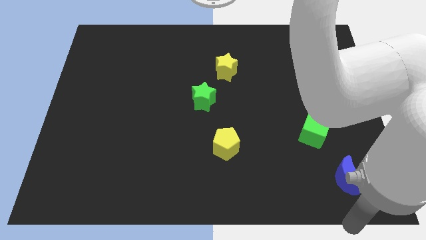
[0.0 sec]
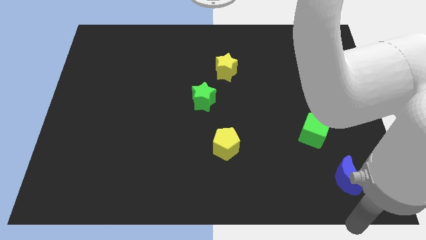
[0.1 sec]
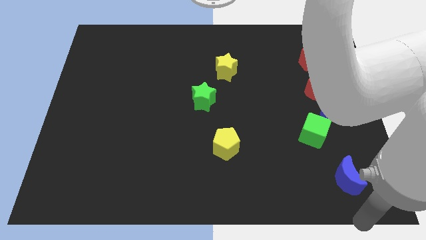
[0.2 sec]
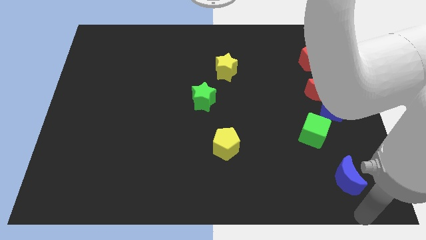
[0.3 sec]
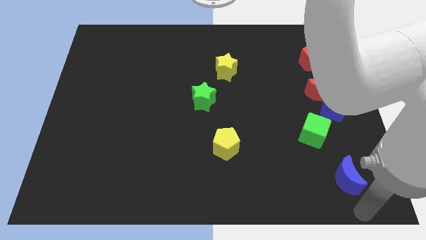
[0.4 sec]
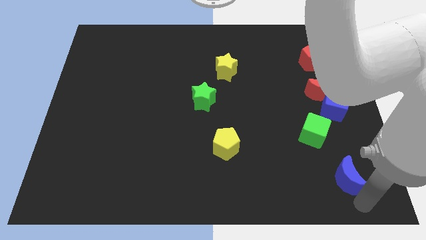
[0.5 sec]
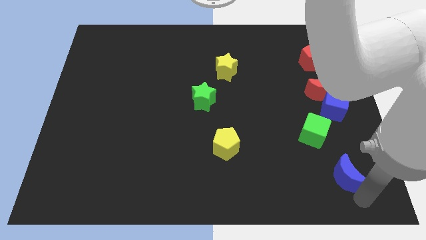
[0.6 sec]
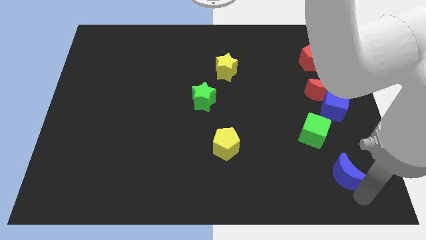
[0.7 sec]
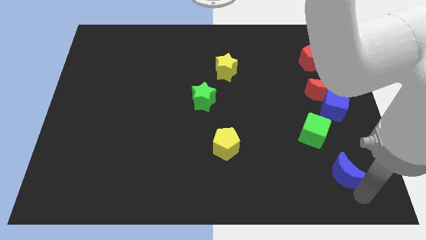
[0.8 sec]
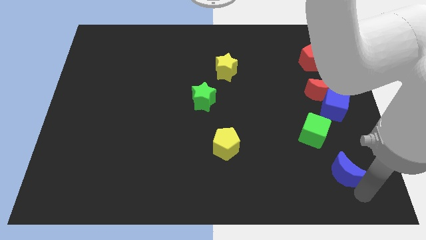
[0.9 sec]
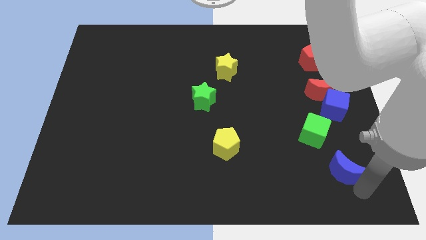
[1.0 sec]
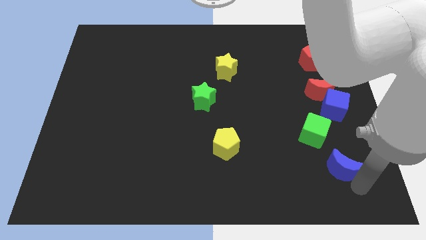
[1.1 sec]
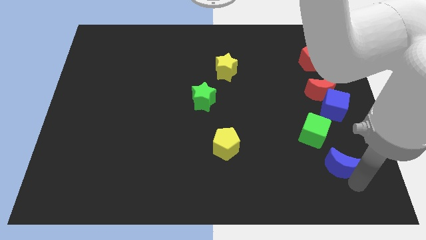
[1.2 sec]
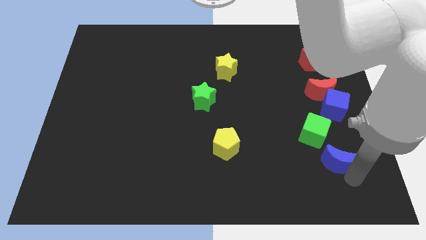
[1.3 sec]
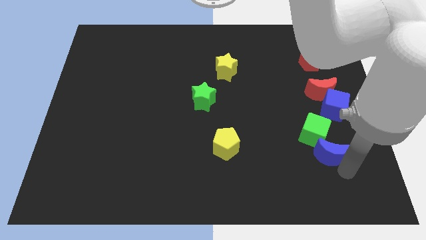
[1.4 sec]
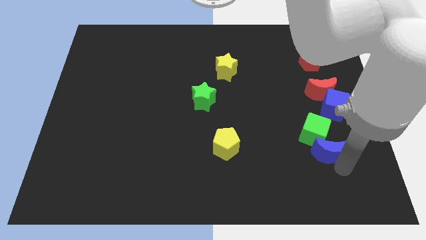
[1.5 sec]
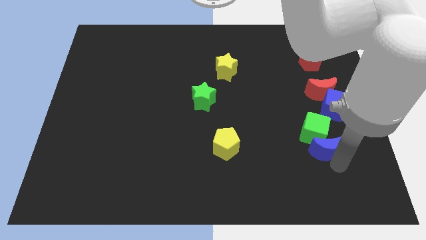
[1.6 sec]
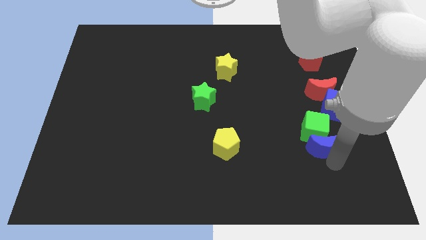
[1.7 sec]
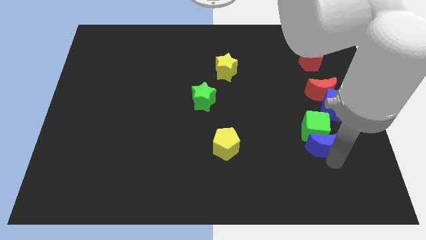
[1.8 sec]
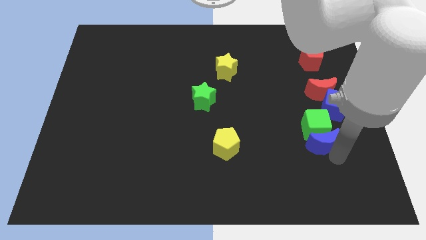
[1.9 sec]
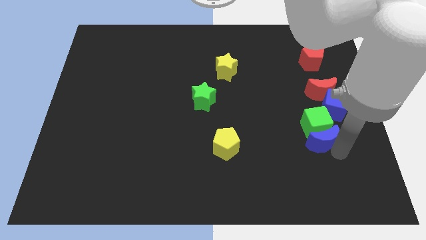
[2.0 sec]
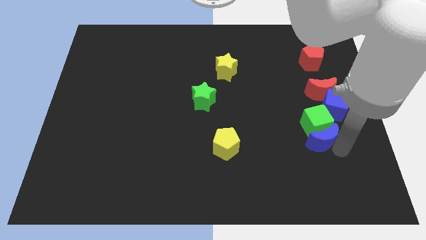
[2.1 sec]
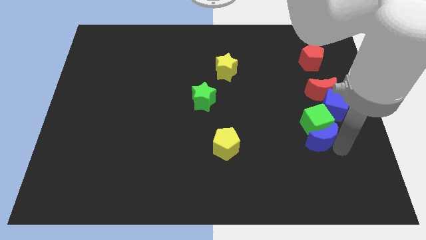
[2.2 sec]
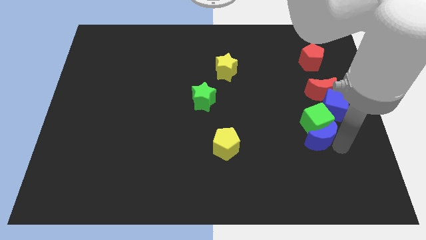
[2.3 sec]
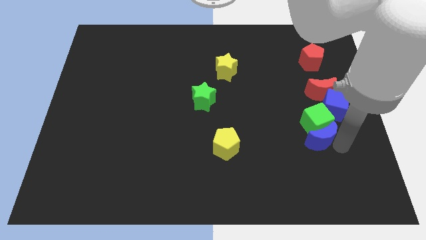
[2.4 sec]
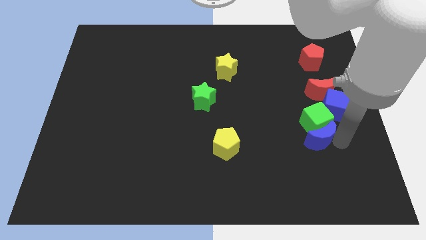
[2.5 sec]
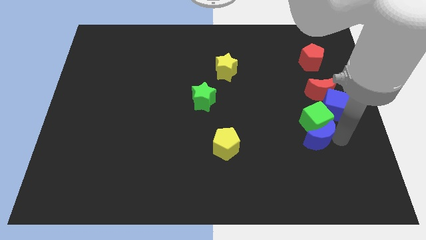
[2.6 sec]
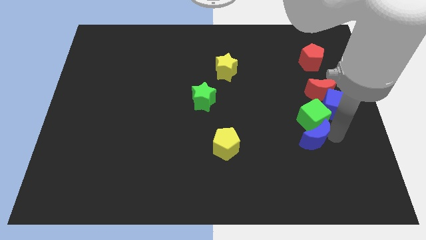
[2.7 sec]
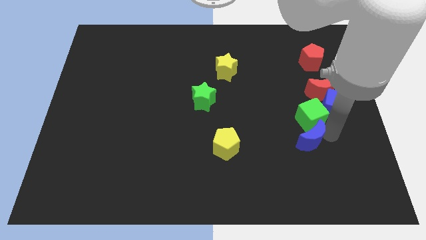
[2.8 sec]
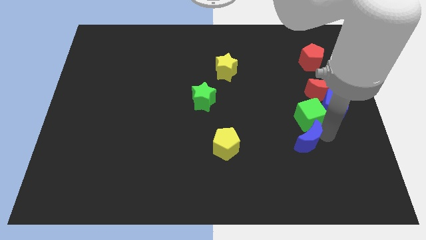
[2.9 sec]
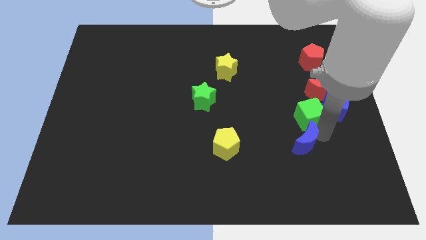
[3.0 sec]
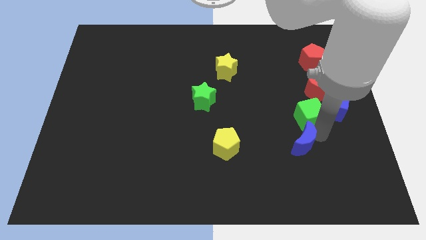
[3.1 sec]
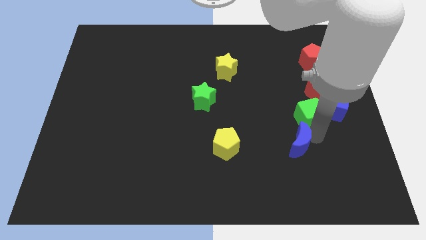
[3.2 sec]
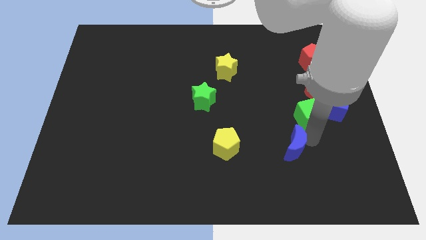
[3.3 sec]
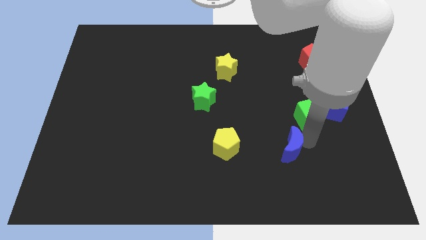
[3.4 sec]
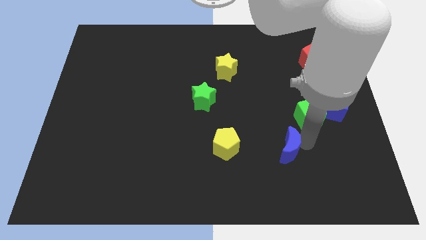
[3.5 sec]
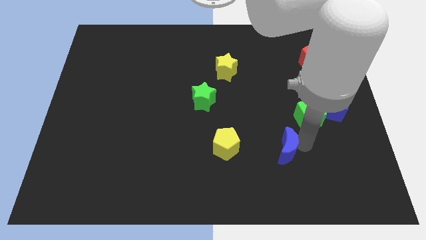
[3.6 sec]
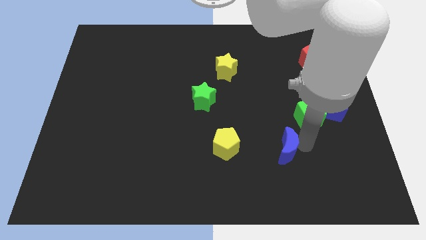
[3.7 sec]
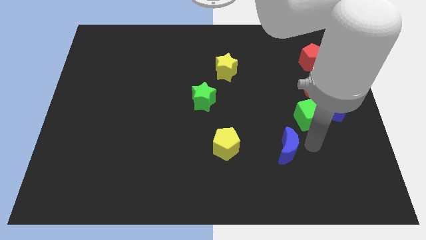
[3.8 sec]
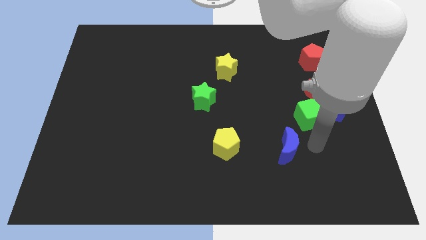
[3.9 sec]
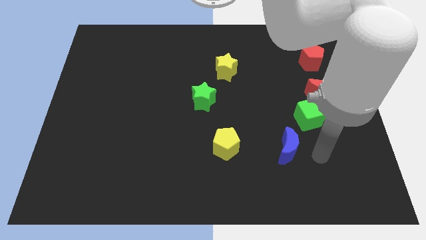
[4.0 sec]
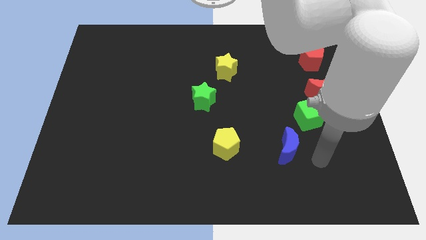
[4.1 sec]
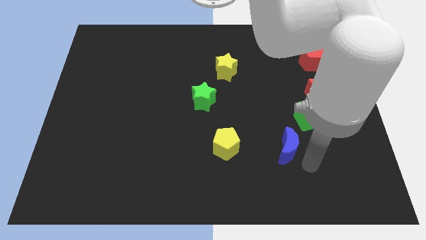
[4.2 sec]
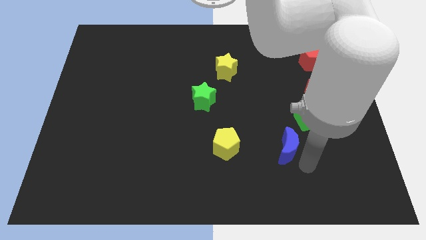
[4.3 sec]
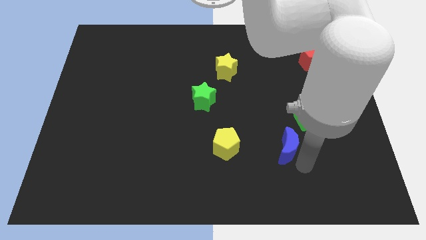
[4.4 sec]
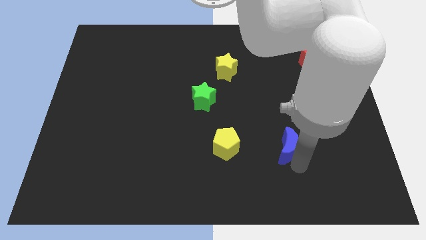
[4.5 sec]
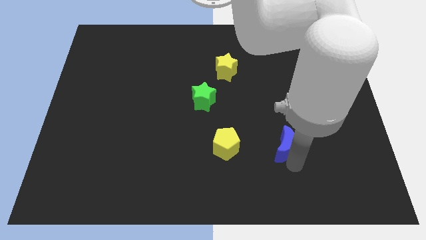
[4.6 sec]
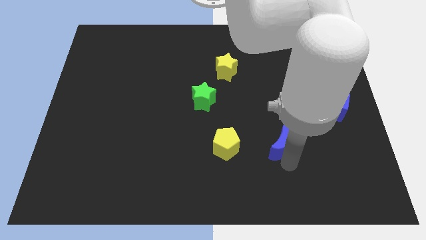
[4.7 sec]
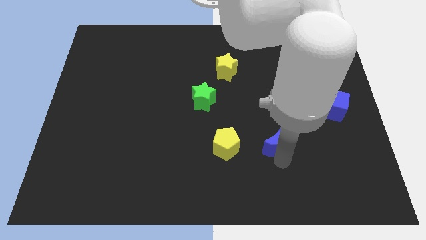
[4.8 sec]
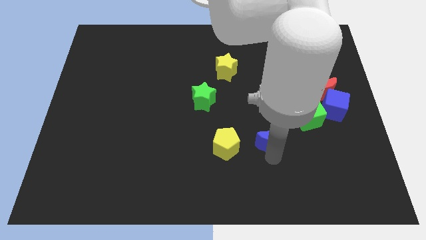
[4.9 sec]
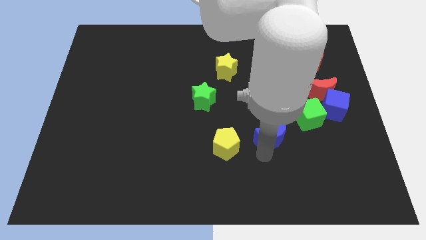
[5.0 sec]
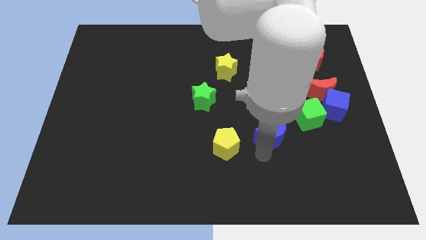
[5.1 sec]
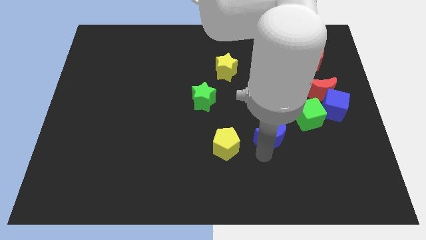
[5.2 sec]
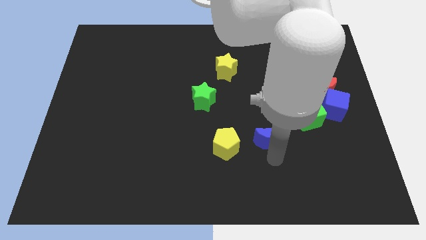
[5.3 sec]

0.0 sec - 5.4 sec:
place the blue moon in between the green cube and yellow pentagon

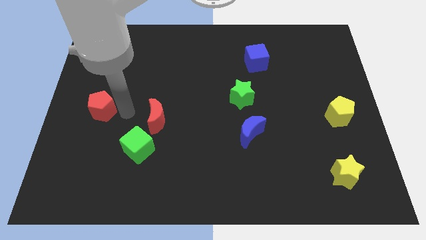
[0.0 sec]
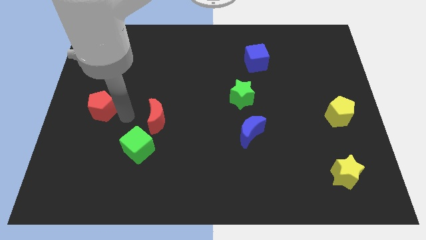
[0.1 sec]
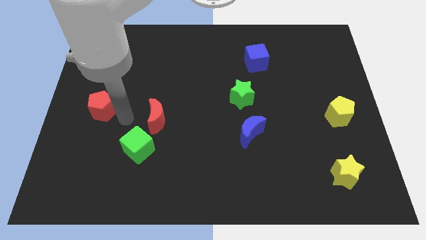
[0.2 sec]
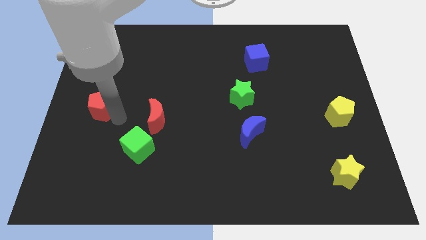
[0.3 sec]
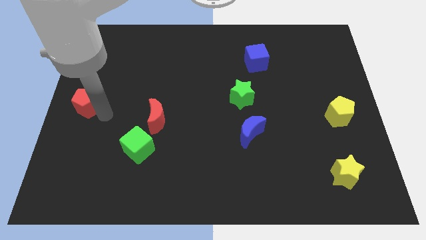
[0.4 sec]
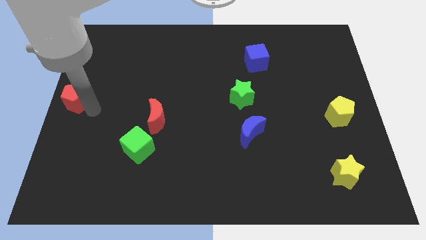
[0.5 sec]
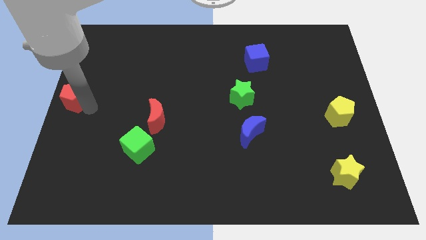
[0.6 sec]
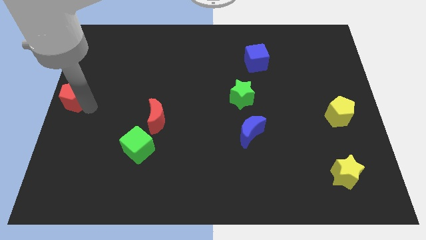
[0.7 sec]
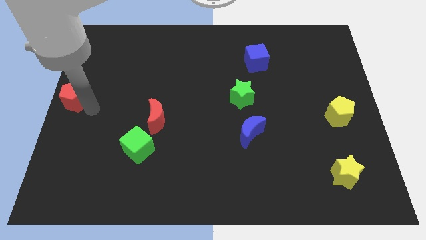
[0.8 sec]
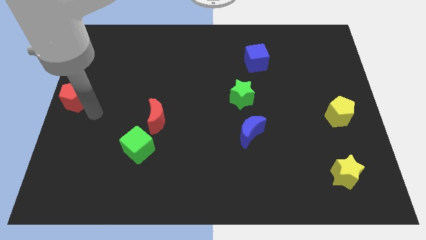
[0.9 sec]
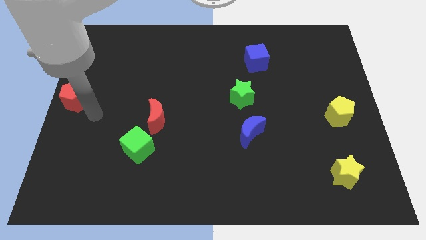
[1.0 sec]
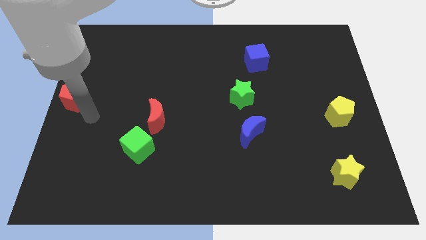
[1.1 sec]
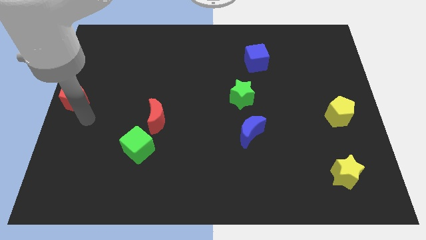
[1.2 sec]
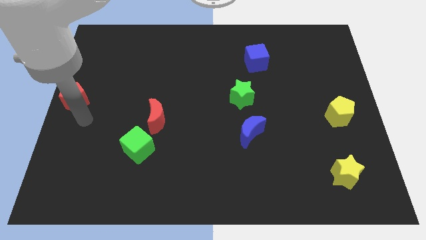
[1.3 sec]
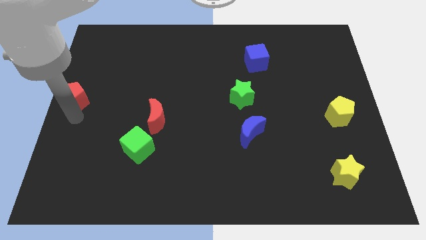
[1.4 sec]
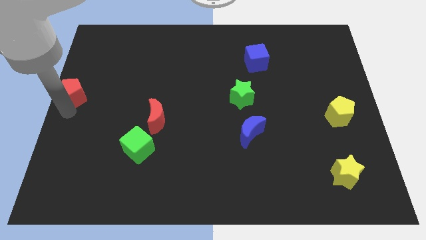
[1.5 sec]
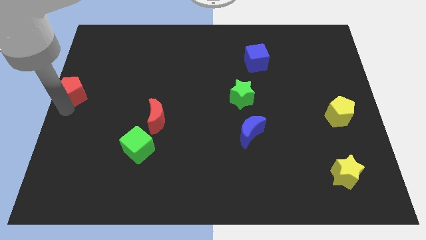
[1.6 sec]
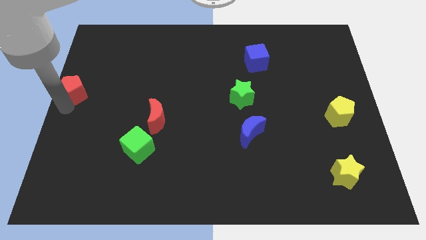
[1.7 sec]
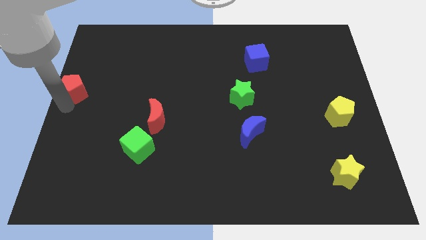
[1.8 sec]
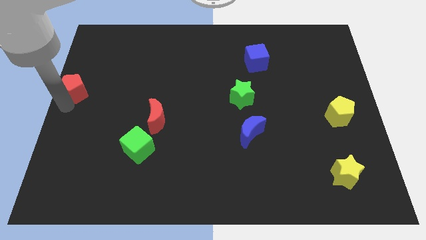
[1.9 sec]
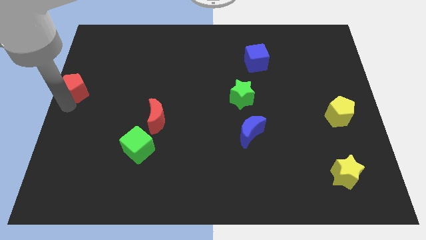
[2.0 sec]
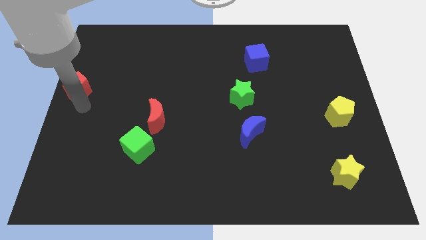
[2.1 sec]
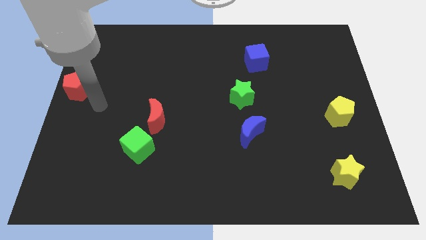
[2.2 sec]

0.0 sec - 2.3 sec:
push the red pentagon to the center left

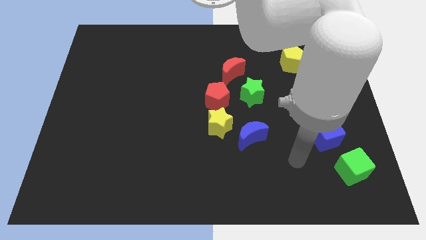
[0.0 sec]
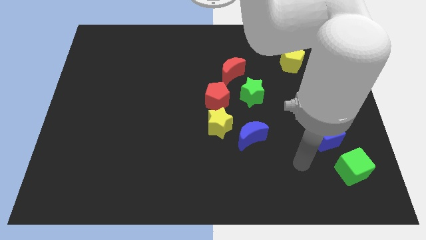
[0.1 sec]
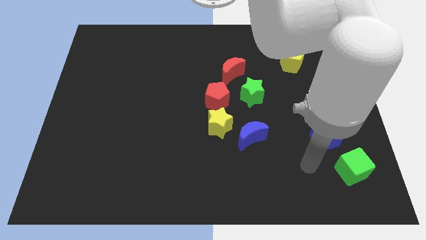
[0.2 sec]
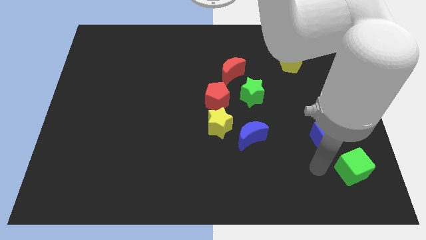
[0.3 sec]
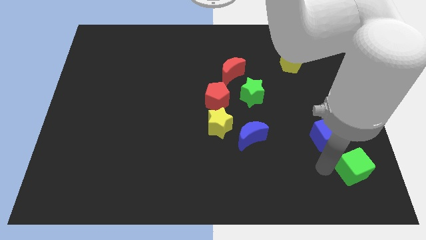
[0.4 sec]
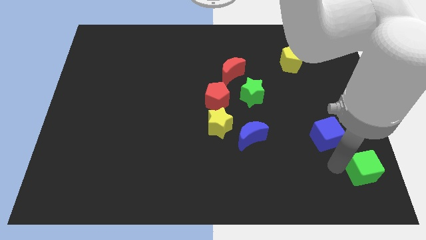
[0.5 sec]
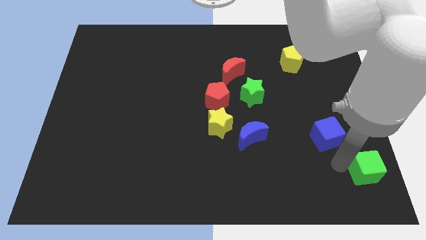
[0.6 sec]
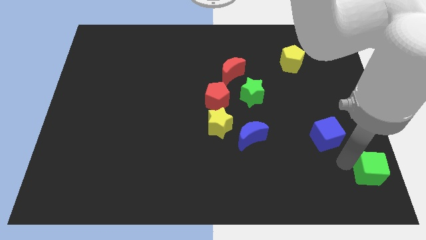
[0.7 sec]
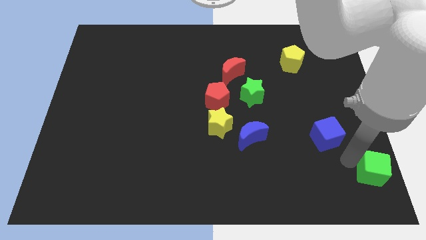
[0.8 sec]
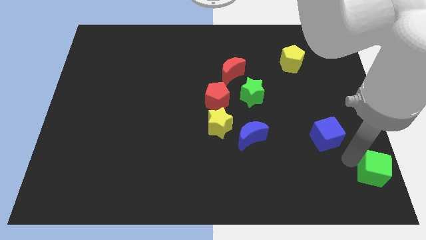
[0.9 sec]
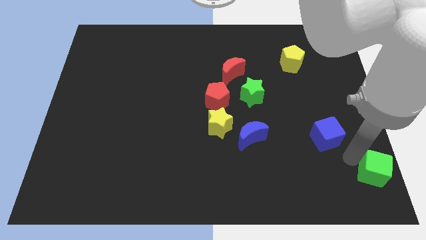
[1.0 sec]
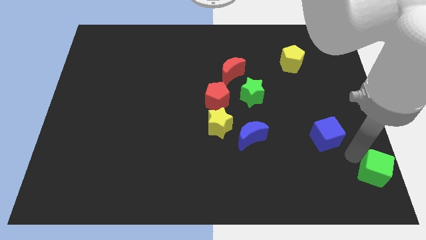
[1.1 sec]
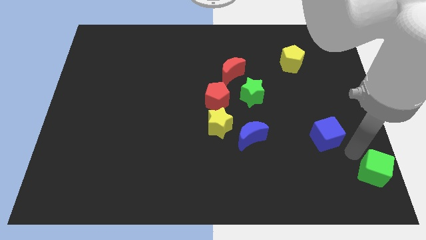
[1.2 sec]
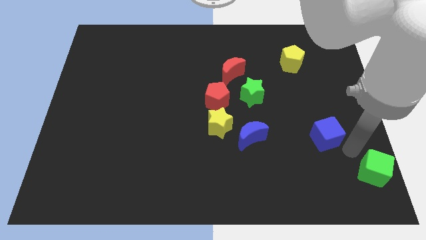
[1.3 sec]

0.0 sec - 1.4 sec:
move the green cube to the right side of the board
